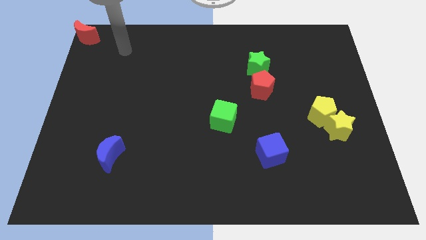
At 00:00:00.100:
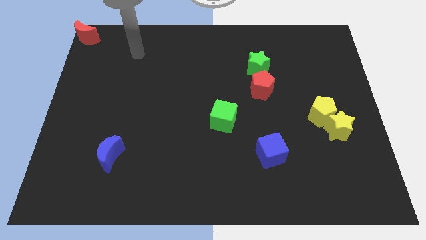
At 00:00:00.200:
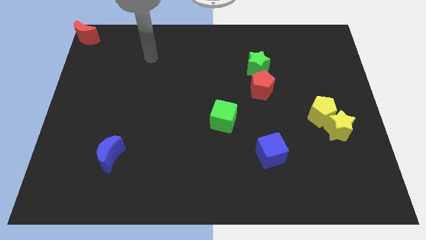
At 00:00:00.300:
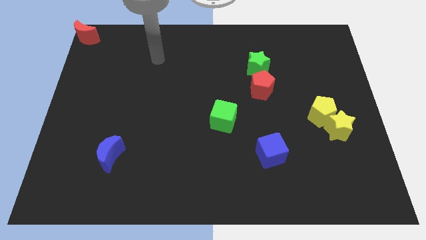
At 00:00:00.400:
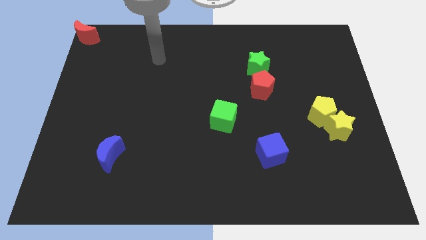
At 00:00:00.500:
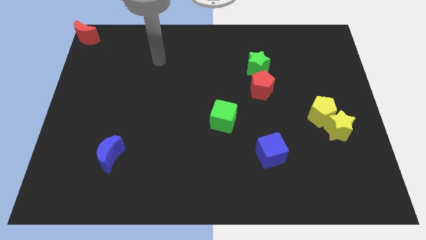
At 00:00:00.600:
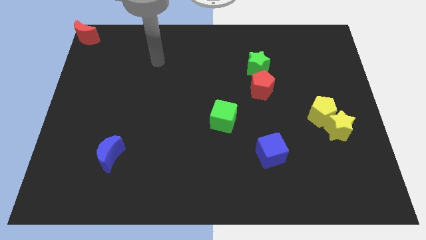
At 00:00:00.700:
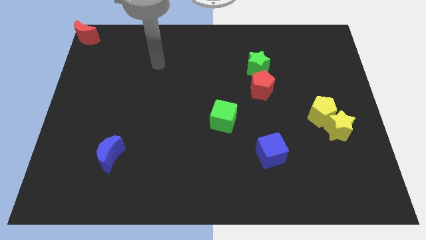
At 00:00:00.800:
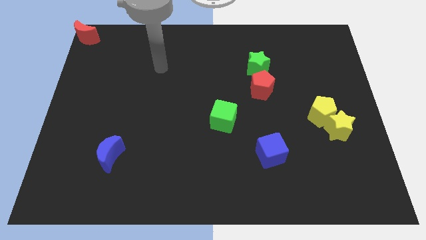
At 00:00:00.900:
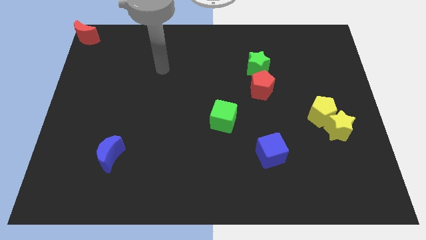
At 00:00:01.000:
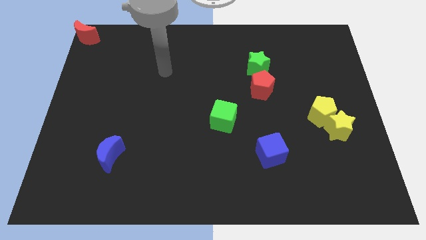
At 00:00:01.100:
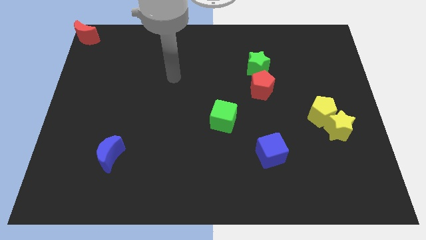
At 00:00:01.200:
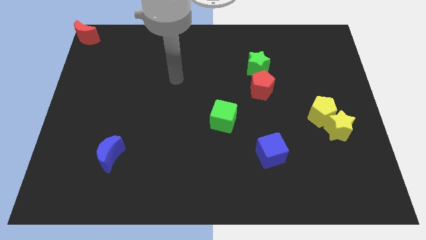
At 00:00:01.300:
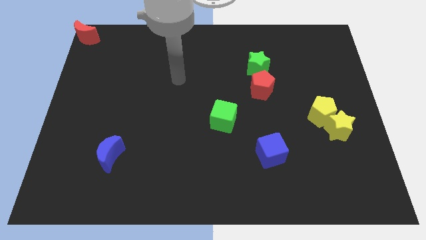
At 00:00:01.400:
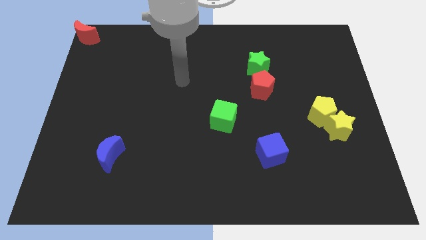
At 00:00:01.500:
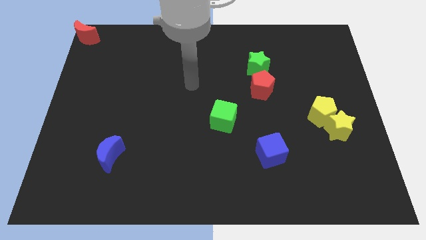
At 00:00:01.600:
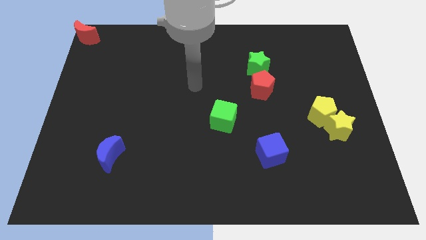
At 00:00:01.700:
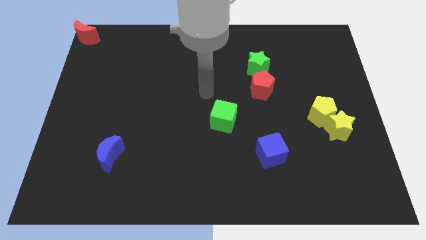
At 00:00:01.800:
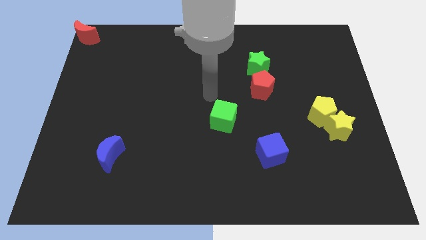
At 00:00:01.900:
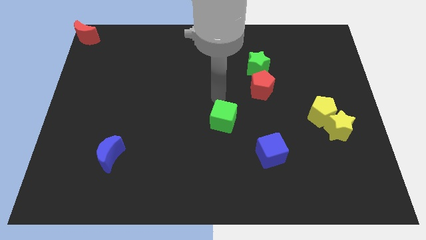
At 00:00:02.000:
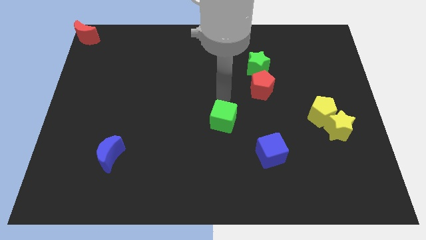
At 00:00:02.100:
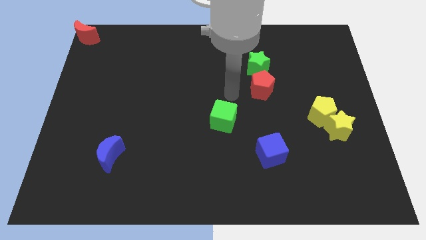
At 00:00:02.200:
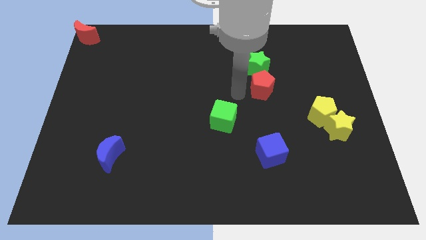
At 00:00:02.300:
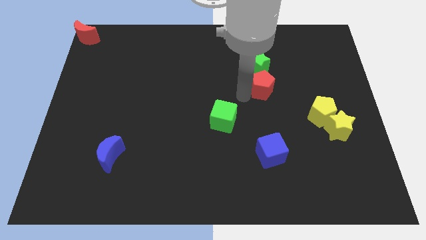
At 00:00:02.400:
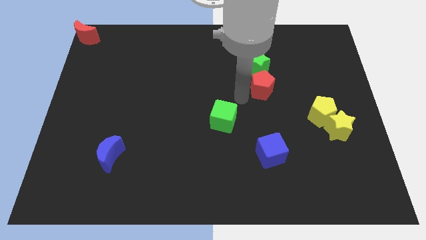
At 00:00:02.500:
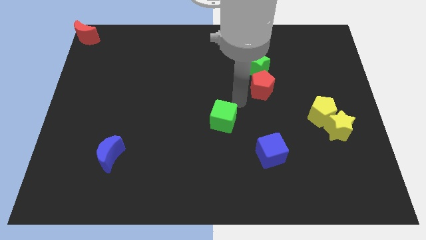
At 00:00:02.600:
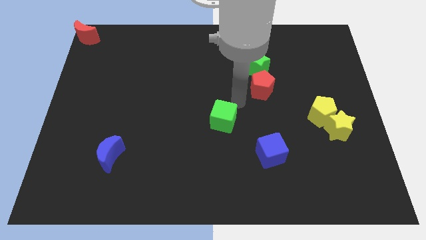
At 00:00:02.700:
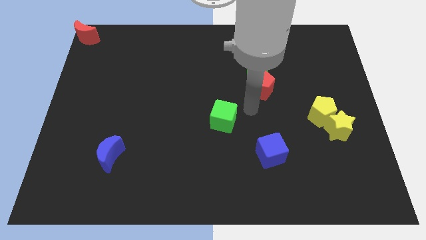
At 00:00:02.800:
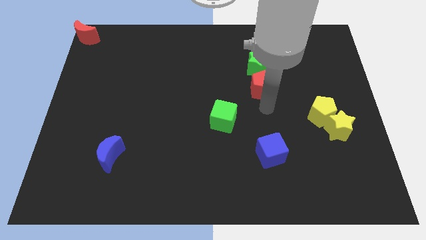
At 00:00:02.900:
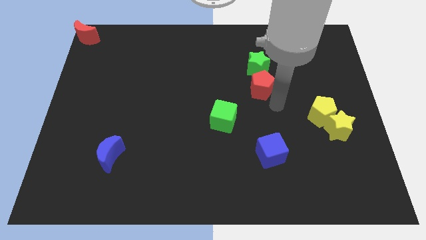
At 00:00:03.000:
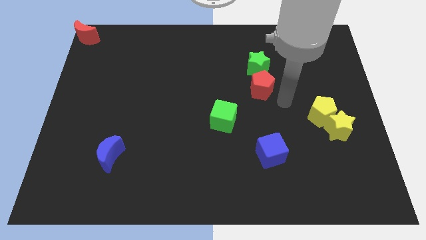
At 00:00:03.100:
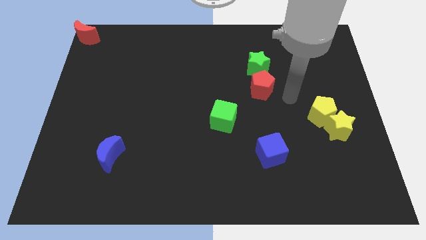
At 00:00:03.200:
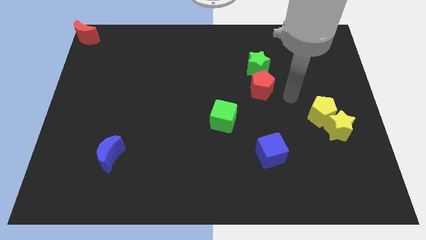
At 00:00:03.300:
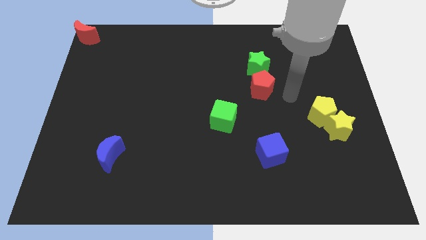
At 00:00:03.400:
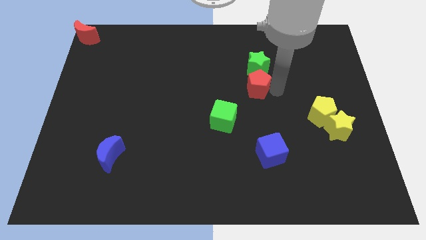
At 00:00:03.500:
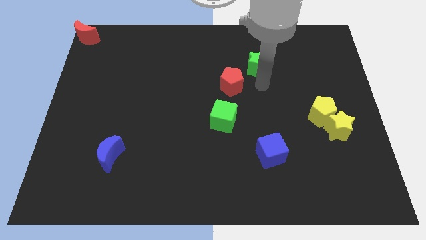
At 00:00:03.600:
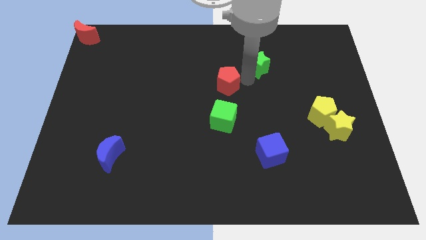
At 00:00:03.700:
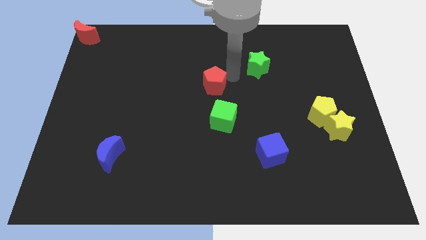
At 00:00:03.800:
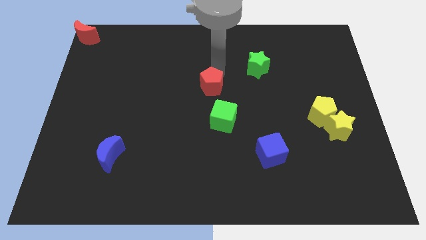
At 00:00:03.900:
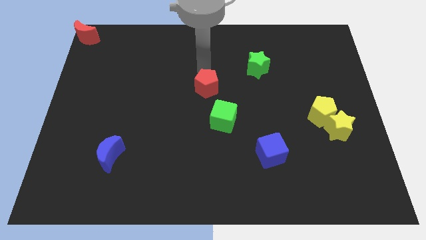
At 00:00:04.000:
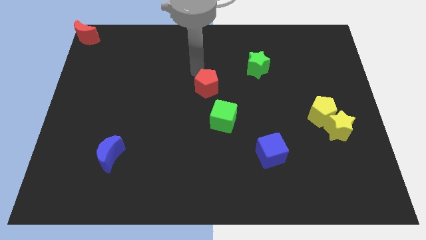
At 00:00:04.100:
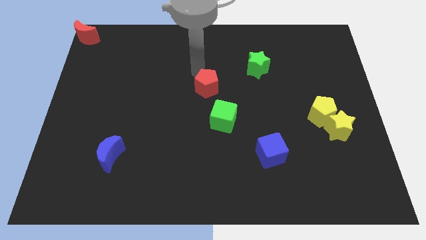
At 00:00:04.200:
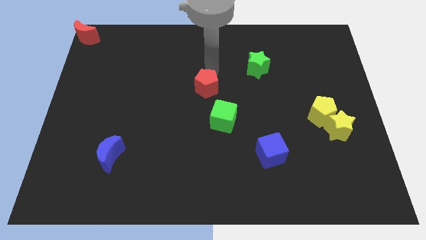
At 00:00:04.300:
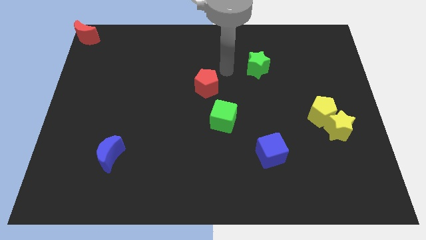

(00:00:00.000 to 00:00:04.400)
push the red pentagon to the center of the board

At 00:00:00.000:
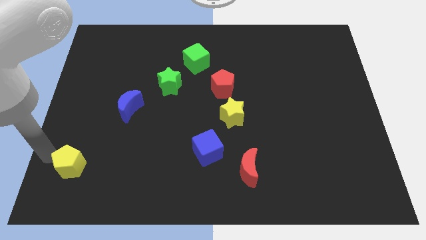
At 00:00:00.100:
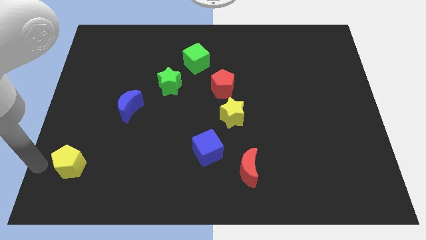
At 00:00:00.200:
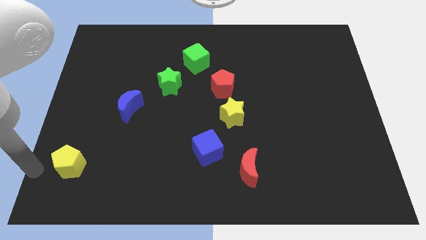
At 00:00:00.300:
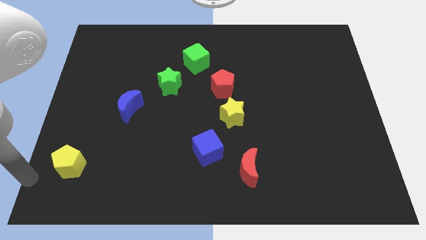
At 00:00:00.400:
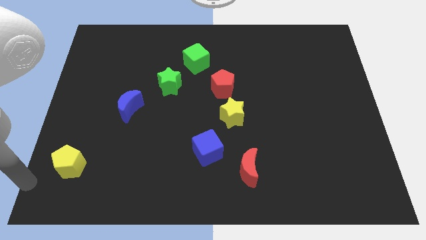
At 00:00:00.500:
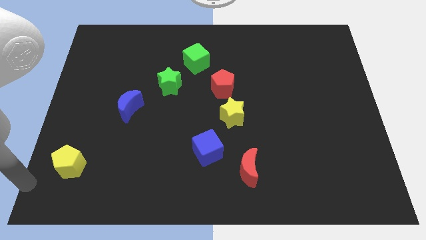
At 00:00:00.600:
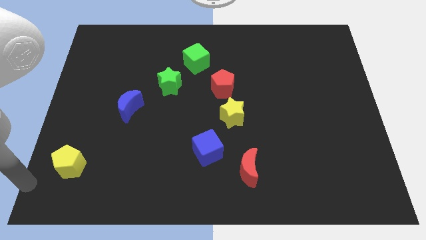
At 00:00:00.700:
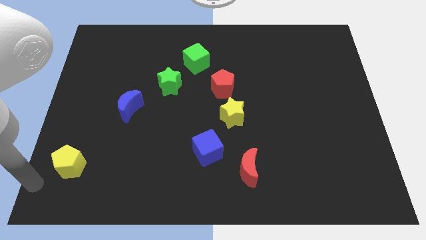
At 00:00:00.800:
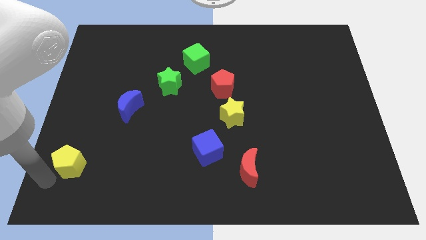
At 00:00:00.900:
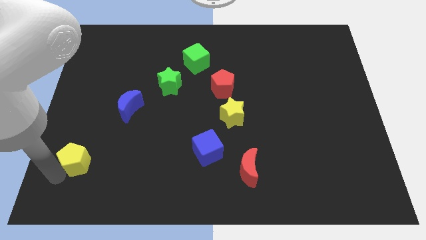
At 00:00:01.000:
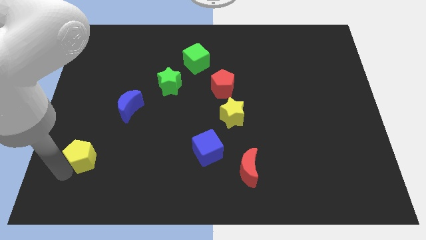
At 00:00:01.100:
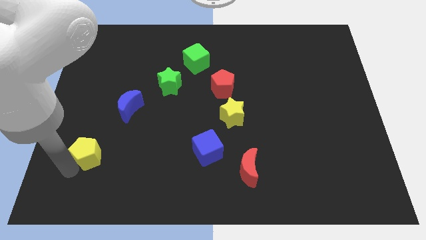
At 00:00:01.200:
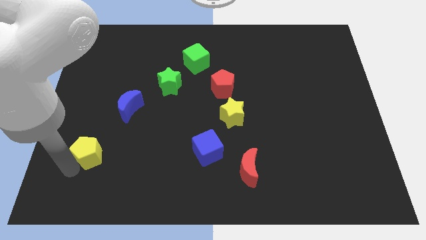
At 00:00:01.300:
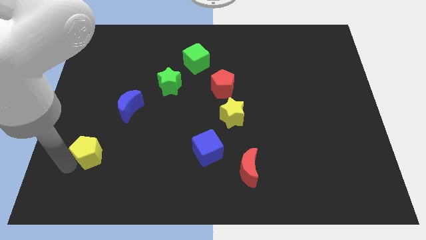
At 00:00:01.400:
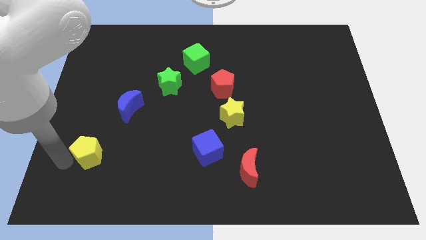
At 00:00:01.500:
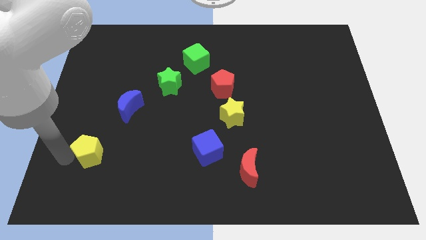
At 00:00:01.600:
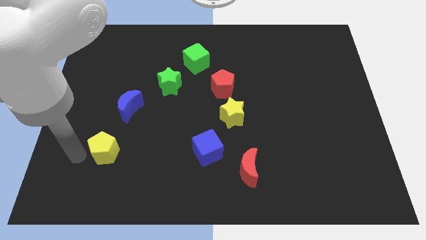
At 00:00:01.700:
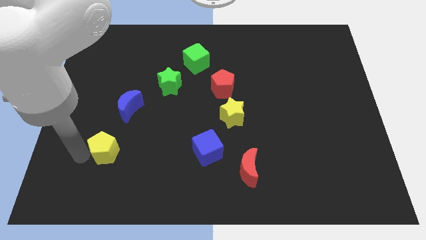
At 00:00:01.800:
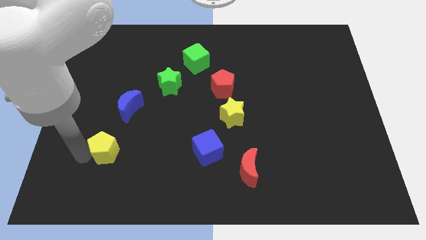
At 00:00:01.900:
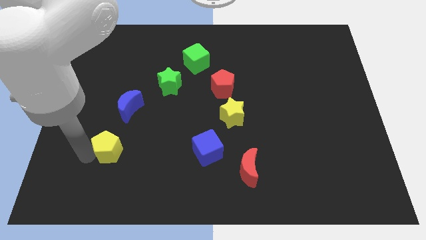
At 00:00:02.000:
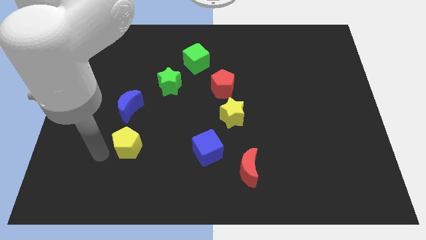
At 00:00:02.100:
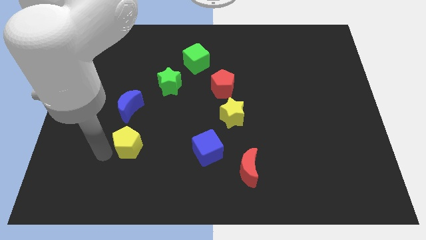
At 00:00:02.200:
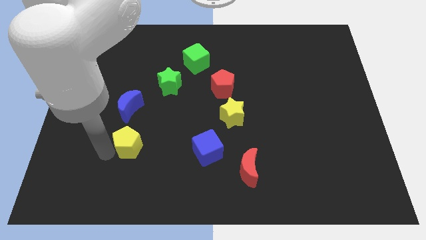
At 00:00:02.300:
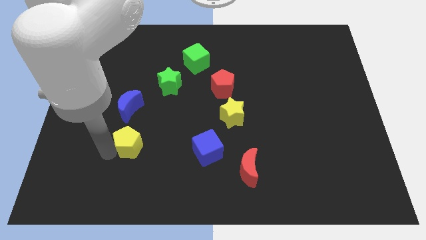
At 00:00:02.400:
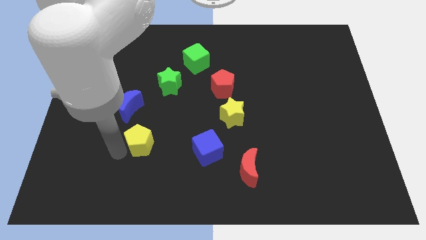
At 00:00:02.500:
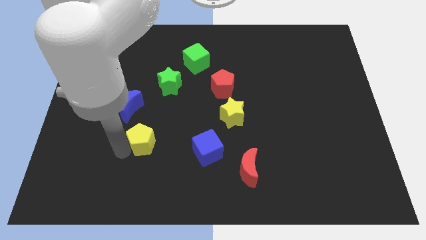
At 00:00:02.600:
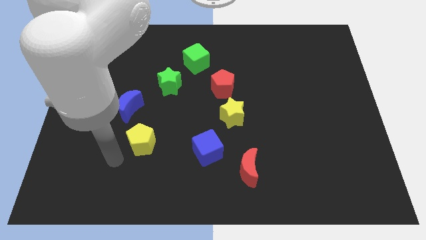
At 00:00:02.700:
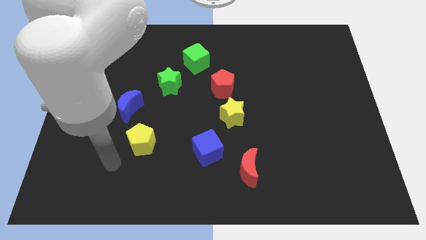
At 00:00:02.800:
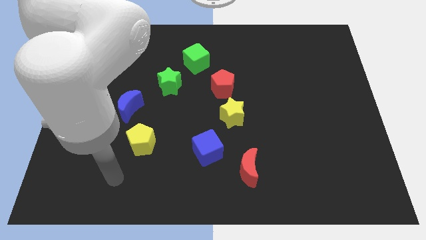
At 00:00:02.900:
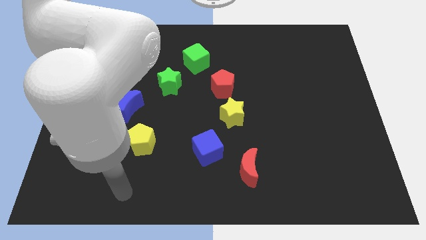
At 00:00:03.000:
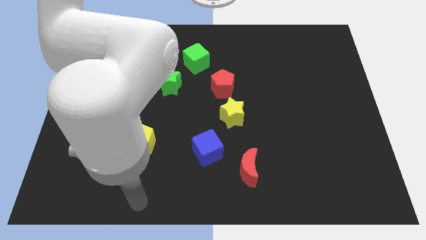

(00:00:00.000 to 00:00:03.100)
push yellow pentagon below blue crescent

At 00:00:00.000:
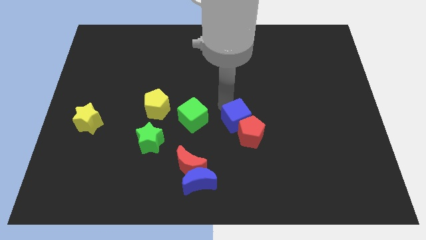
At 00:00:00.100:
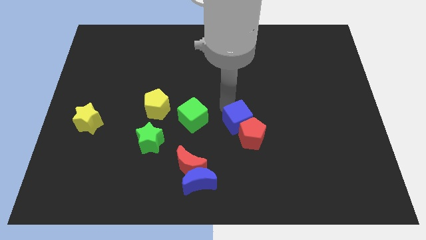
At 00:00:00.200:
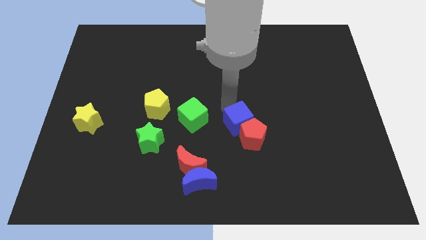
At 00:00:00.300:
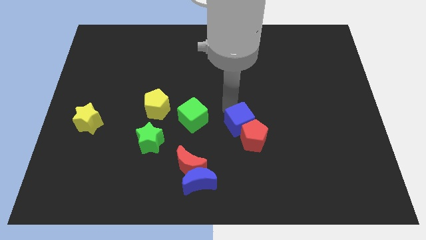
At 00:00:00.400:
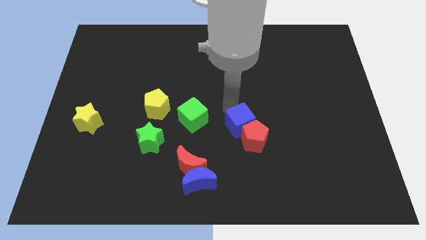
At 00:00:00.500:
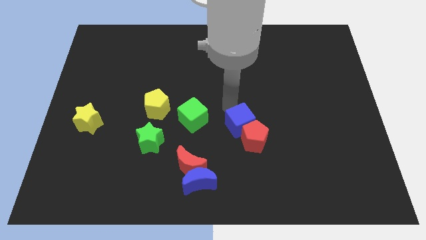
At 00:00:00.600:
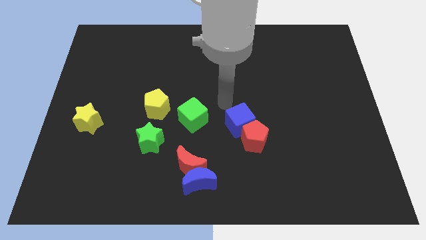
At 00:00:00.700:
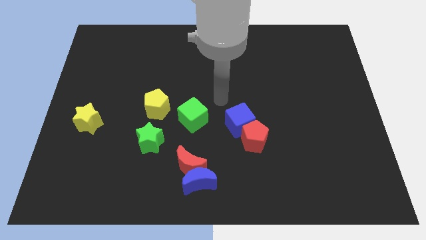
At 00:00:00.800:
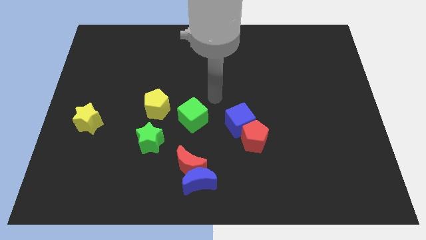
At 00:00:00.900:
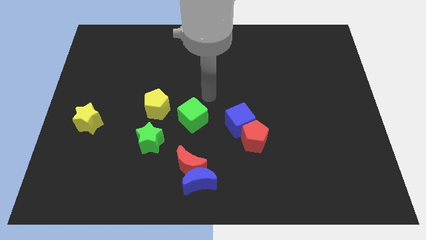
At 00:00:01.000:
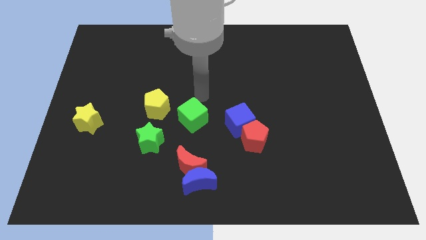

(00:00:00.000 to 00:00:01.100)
push the blue cube into the red pentagon
